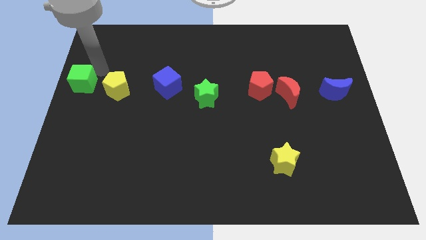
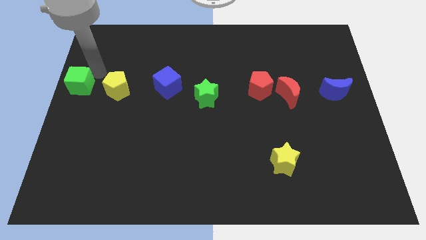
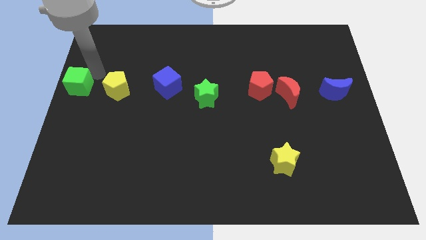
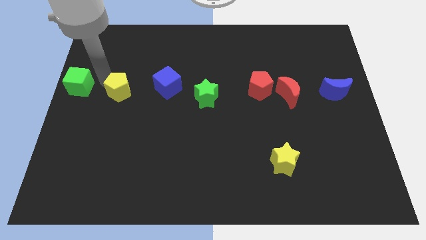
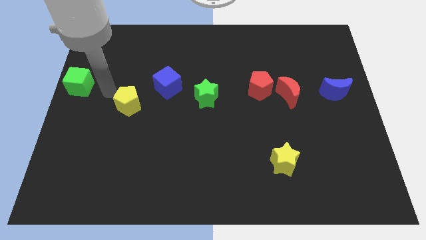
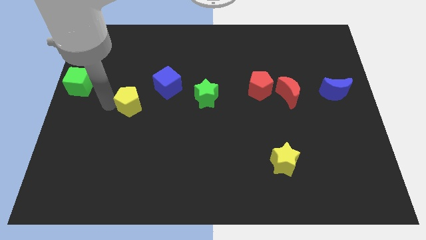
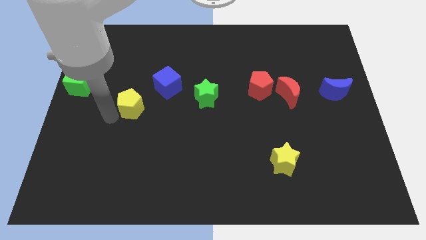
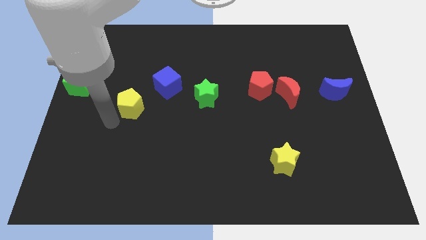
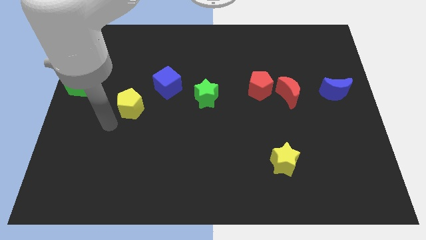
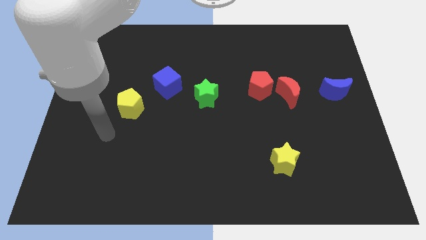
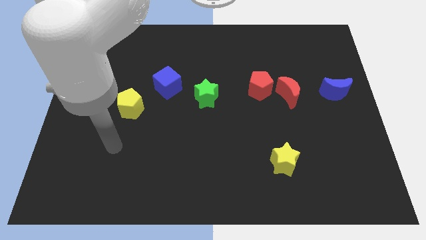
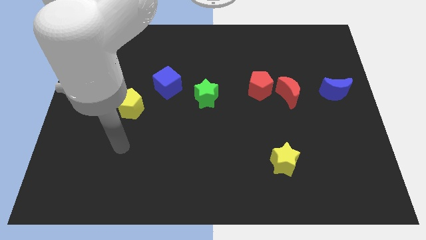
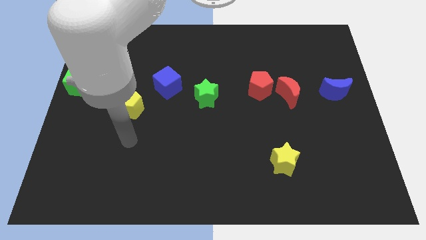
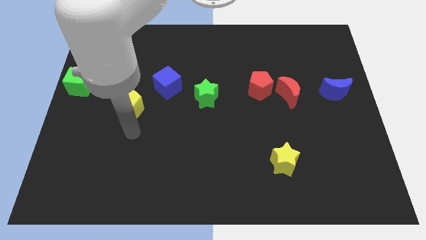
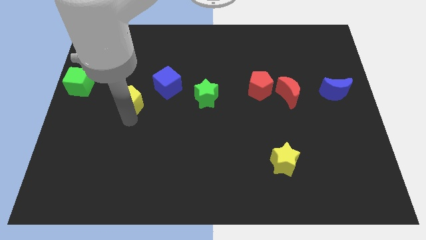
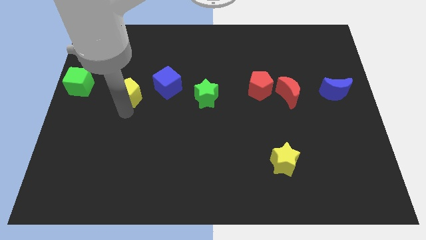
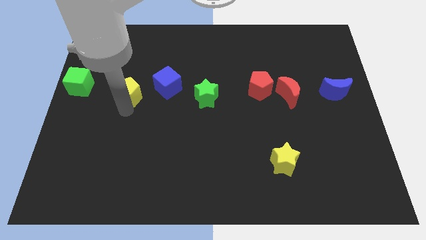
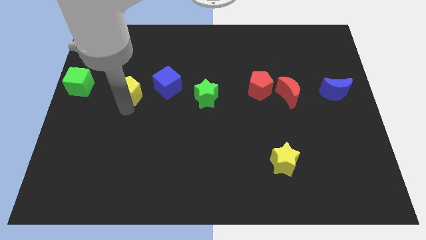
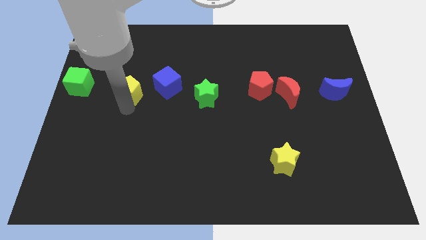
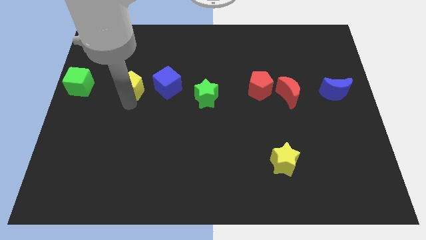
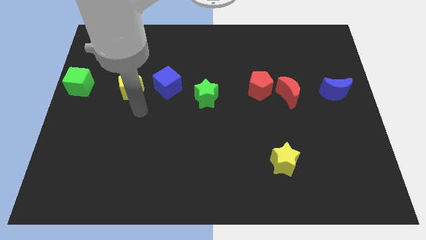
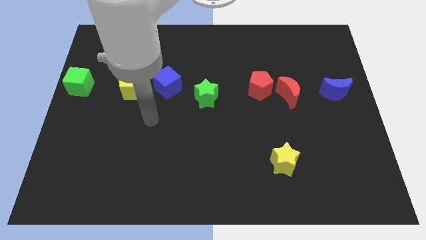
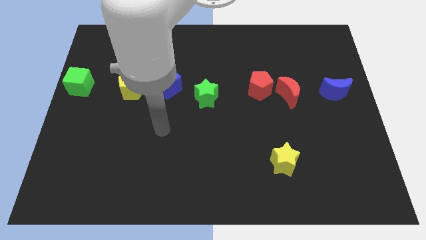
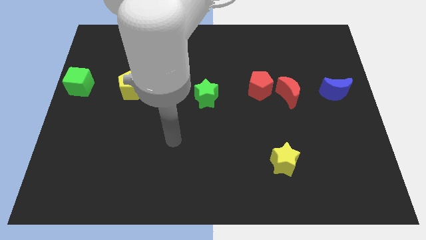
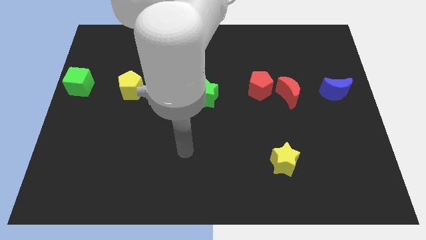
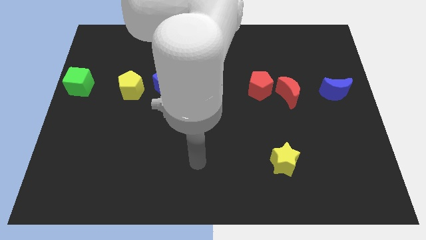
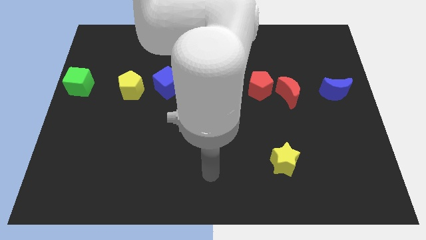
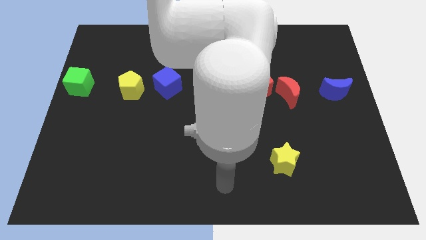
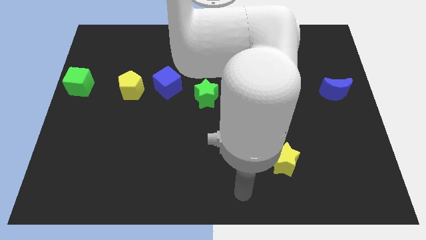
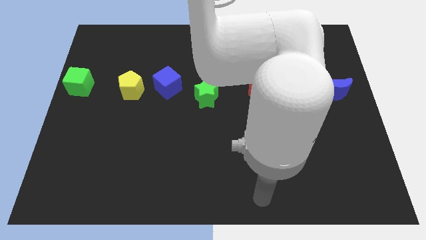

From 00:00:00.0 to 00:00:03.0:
adjust the yellow pentagon in between the cubes

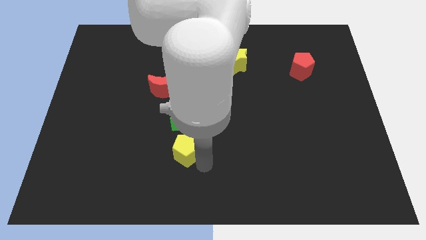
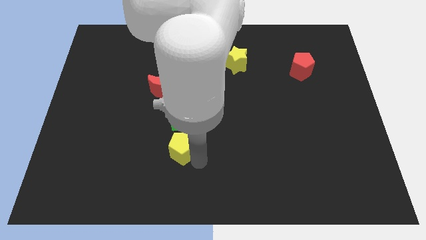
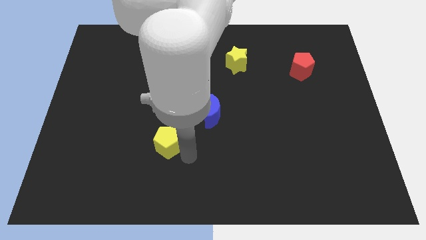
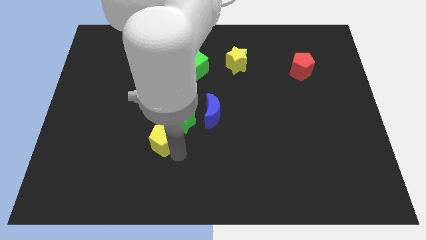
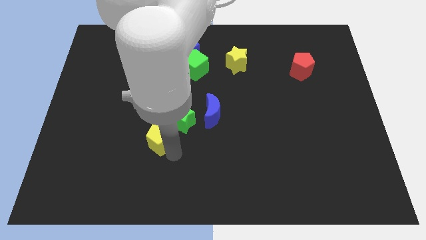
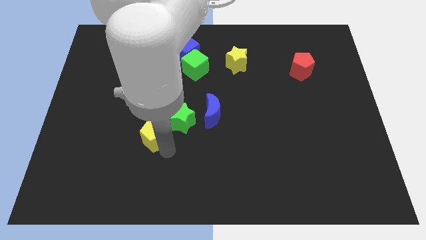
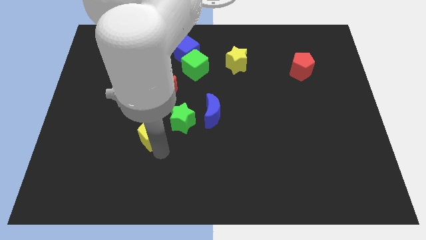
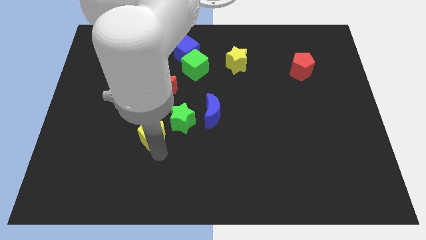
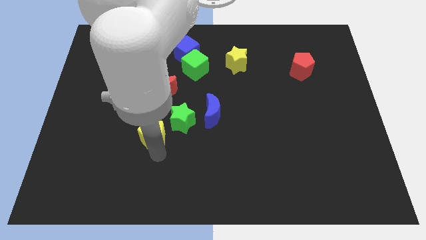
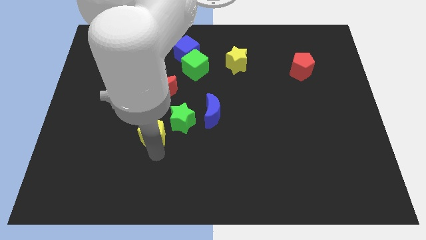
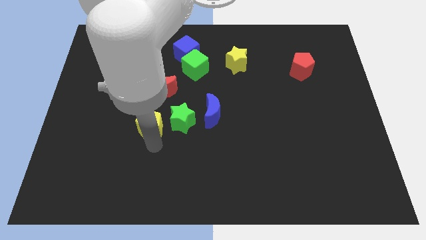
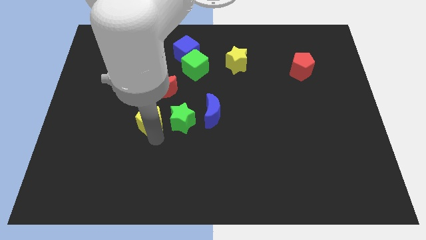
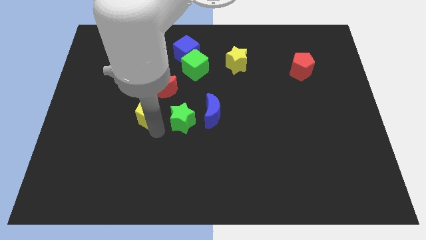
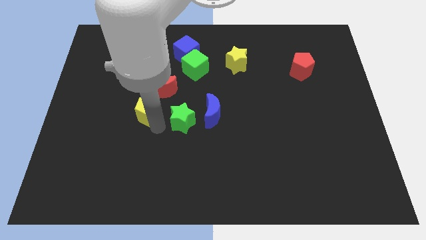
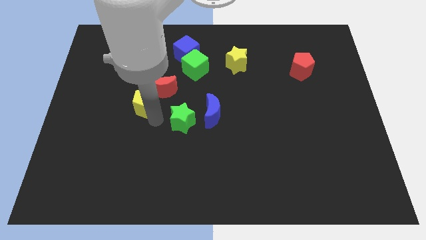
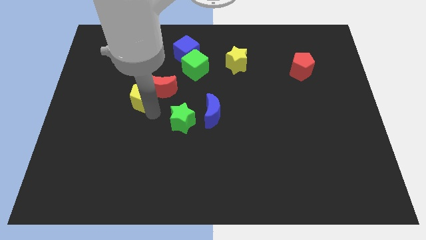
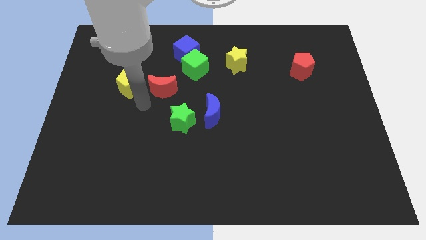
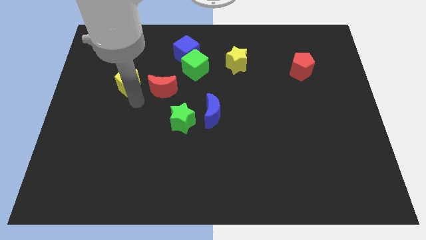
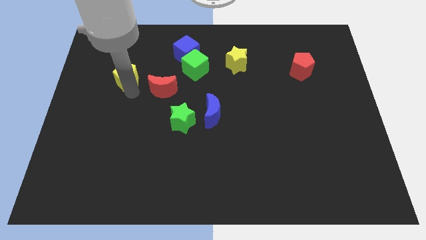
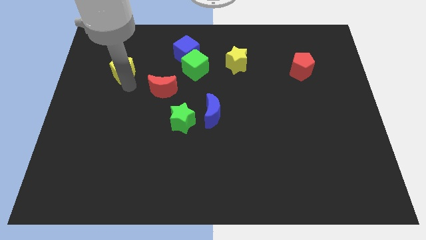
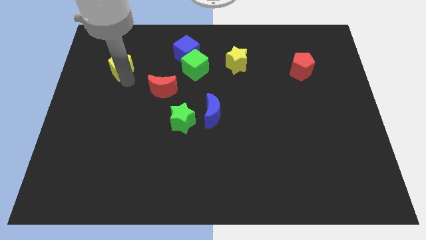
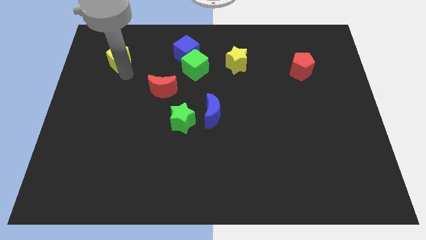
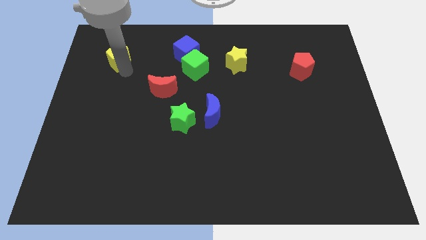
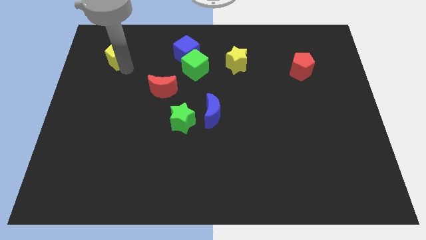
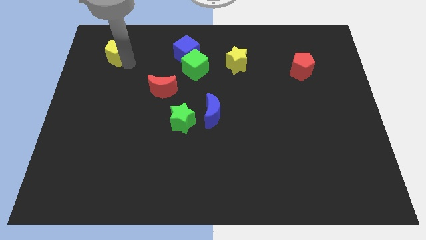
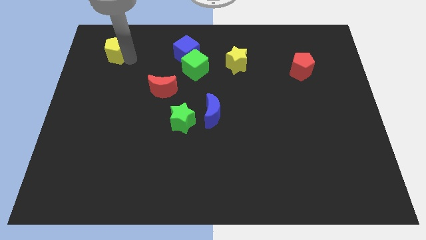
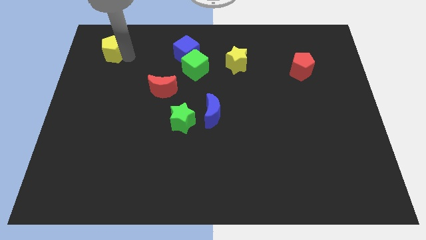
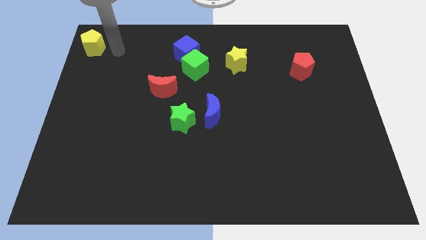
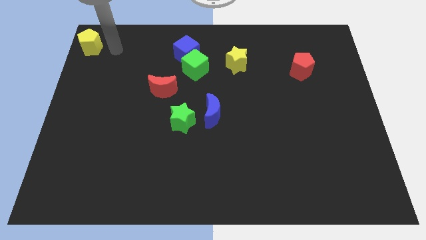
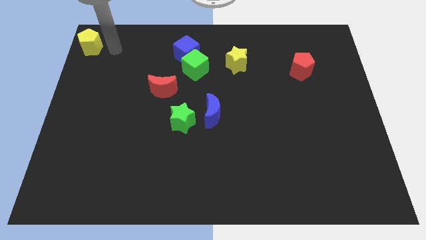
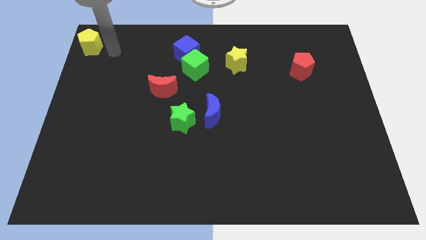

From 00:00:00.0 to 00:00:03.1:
slide yellow pentagon towards top left

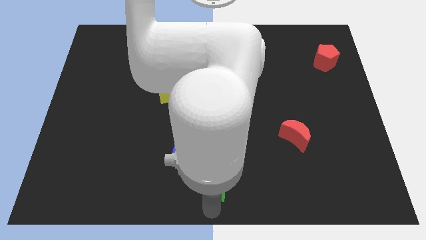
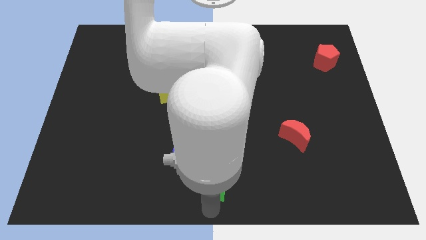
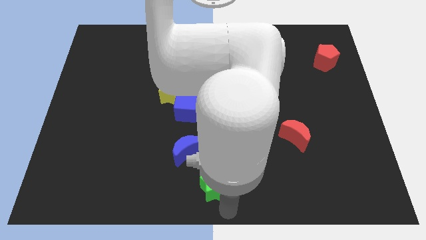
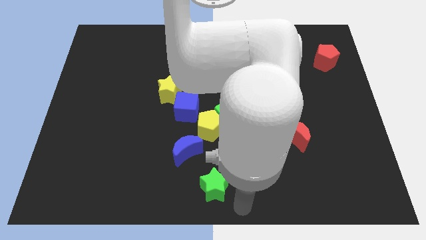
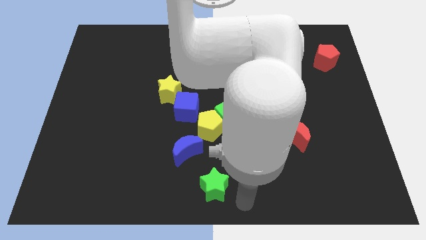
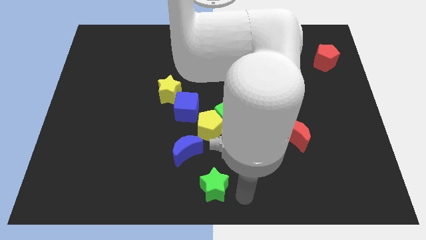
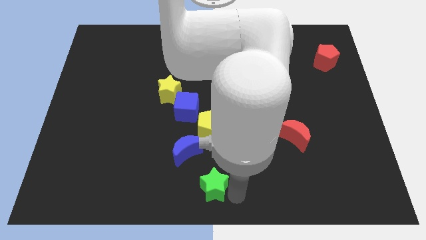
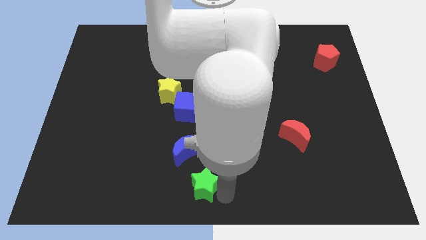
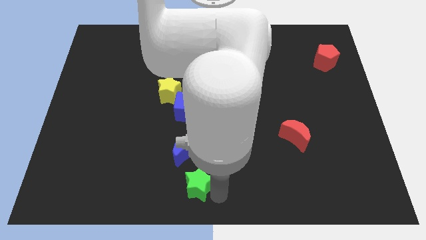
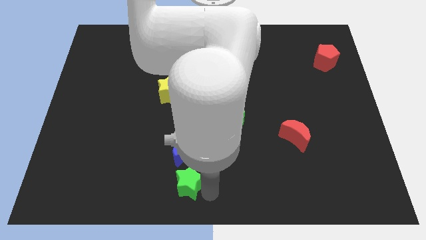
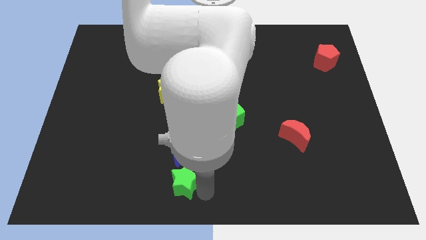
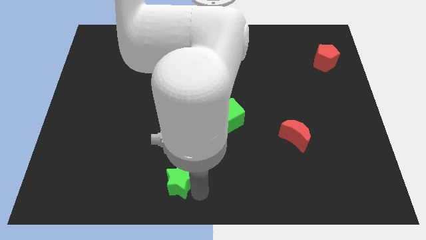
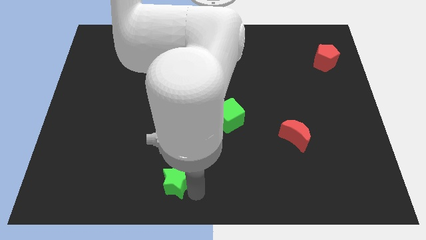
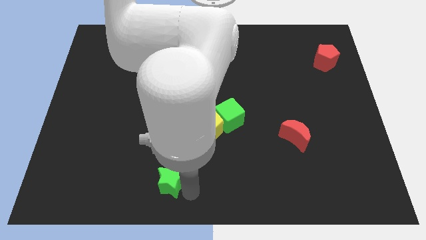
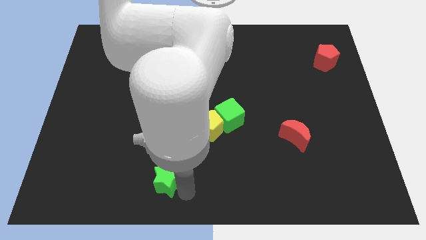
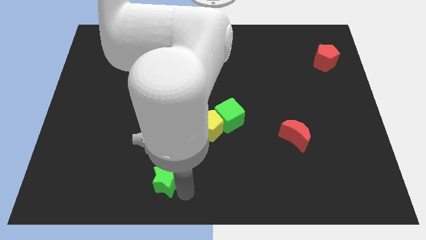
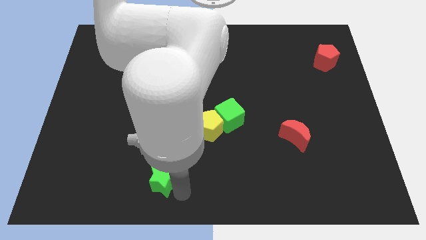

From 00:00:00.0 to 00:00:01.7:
drag the green star to the left

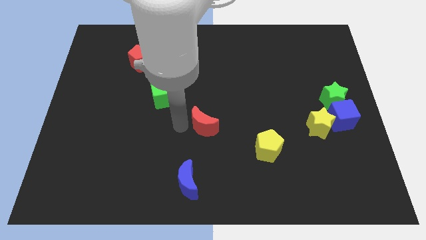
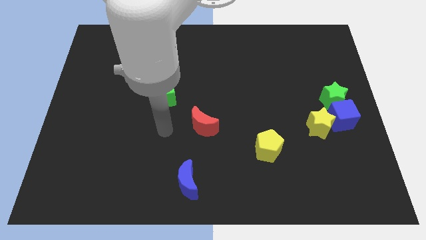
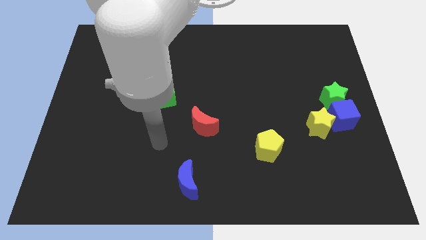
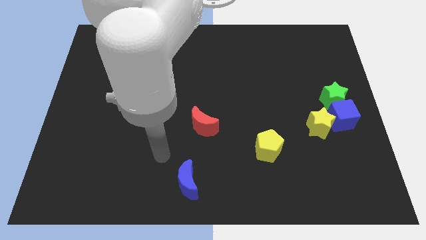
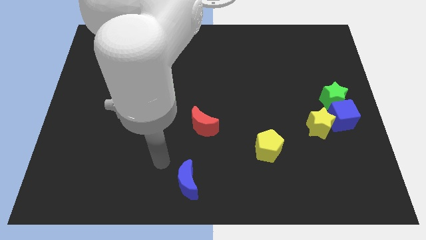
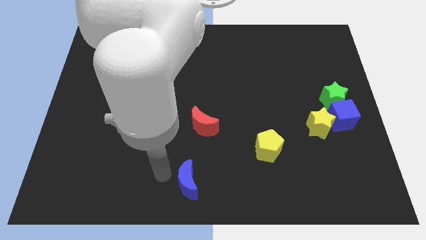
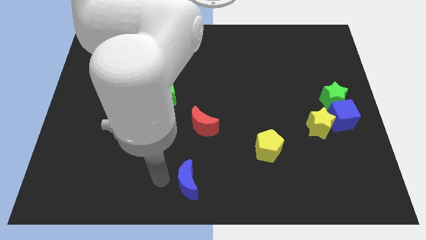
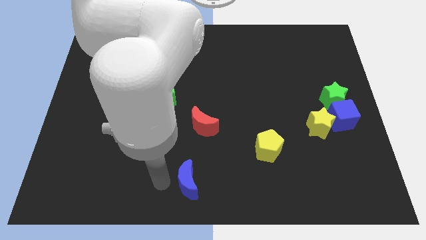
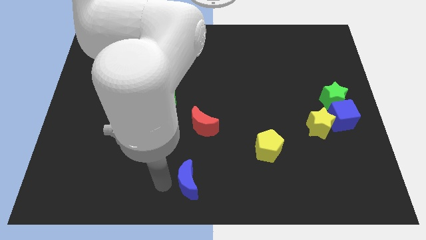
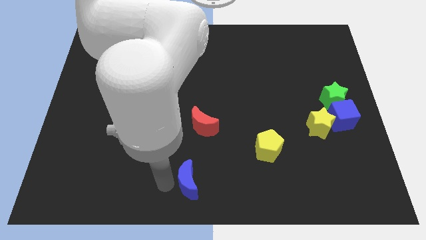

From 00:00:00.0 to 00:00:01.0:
put your arm to the left side of blue crescent
